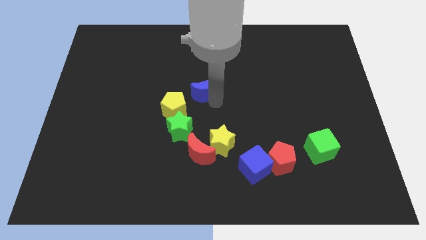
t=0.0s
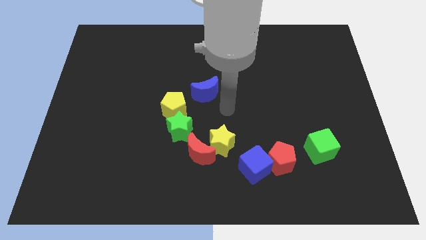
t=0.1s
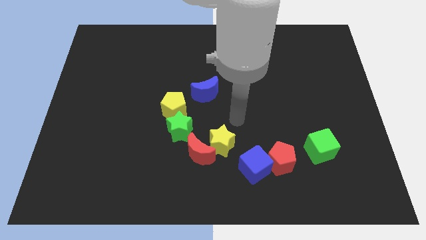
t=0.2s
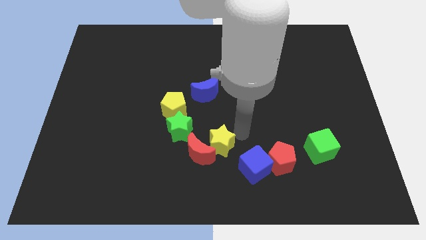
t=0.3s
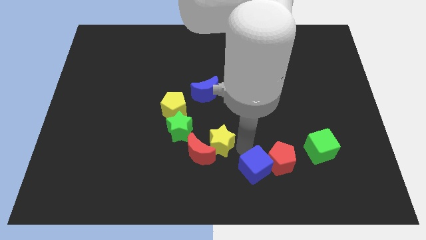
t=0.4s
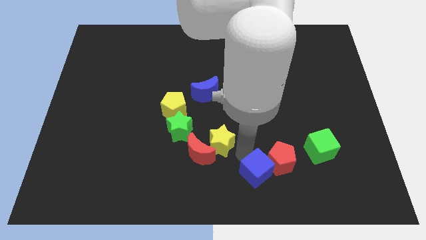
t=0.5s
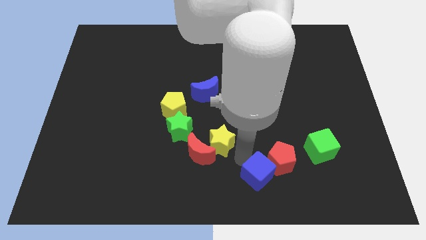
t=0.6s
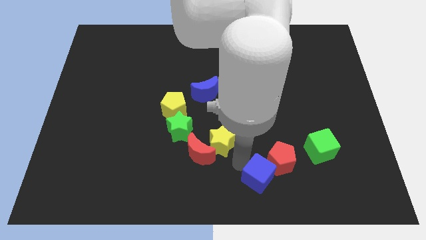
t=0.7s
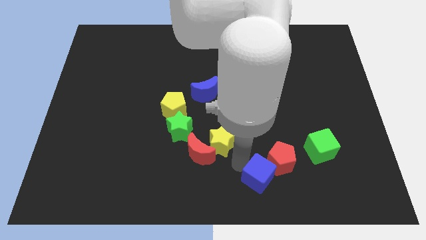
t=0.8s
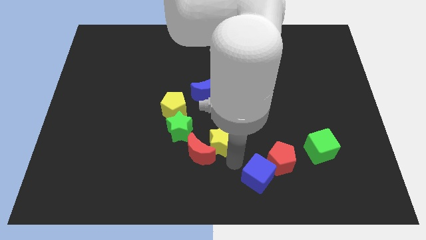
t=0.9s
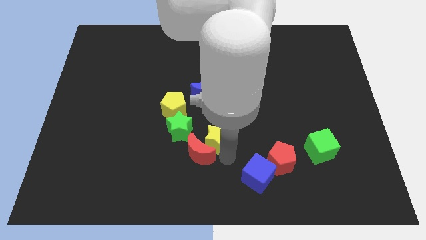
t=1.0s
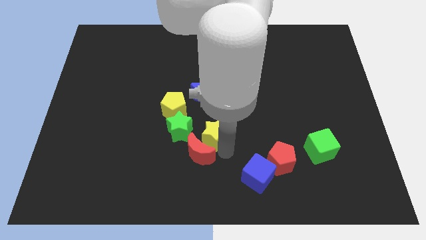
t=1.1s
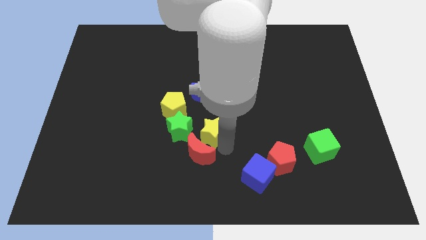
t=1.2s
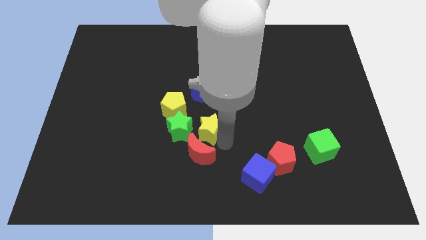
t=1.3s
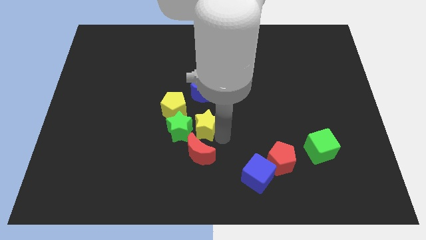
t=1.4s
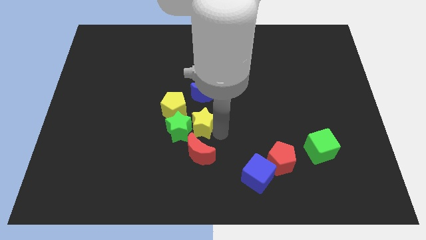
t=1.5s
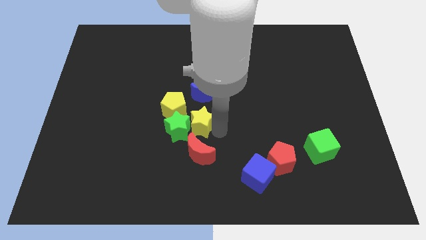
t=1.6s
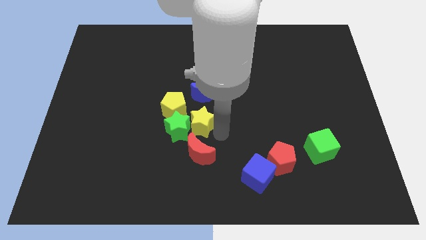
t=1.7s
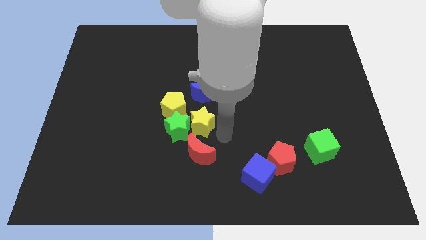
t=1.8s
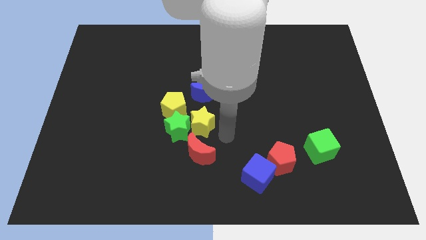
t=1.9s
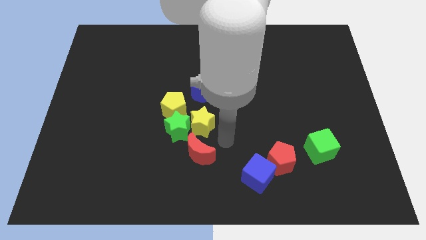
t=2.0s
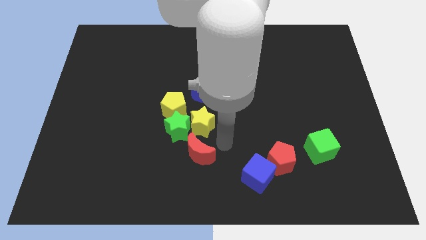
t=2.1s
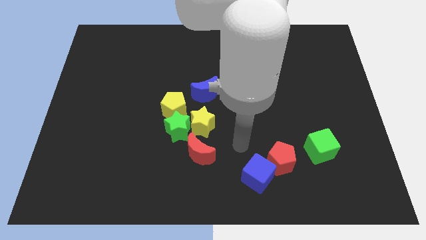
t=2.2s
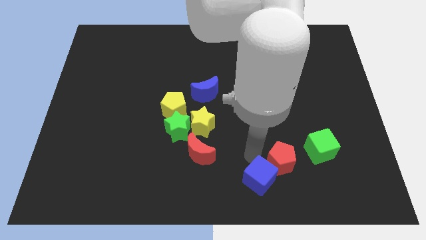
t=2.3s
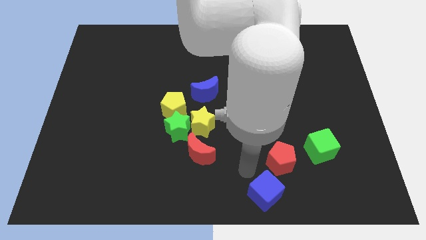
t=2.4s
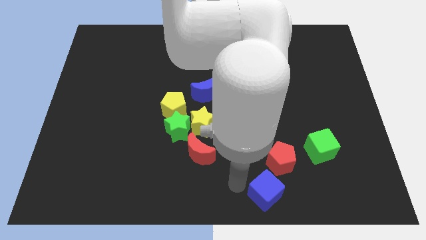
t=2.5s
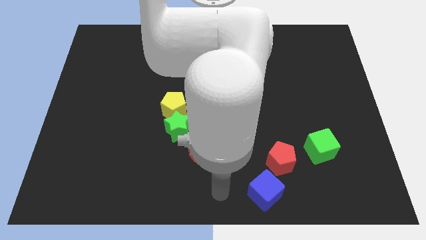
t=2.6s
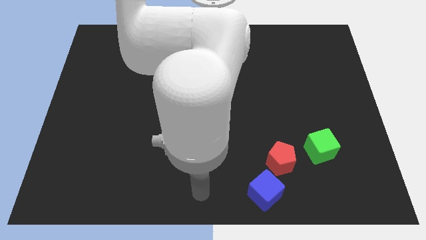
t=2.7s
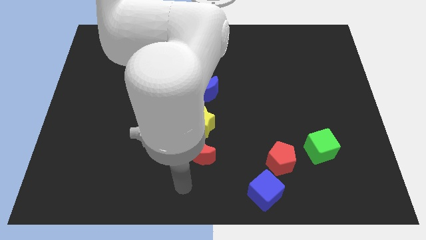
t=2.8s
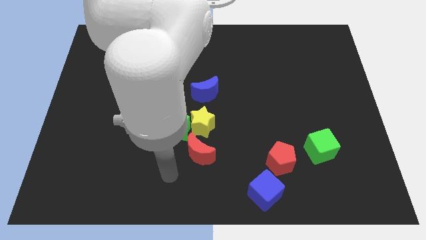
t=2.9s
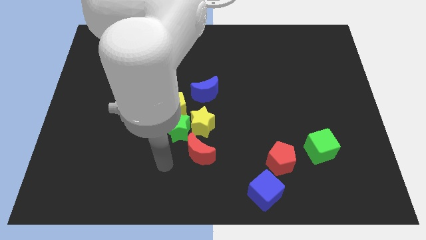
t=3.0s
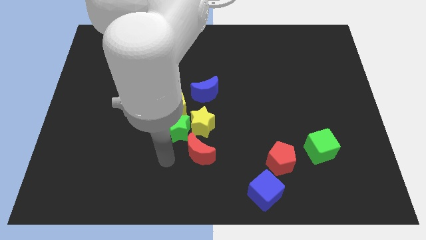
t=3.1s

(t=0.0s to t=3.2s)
slightly move the blue cube down

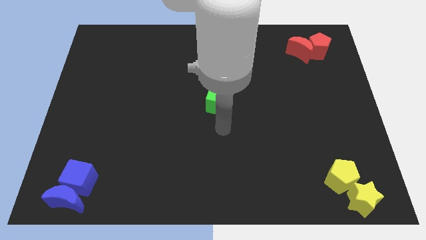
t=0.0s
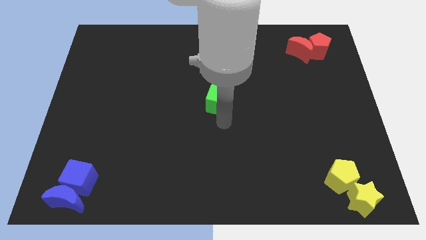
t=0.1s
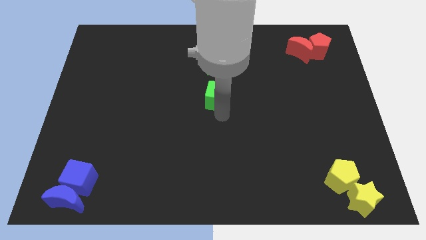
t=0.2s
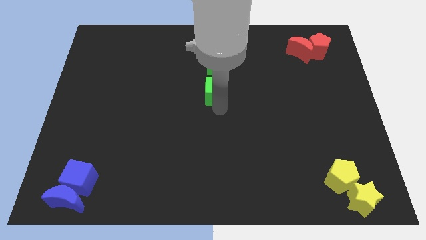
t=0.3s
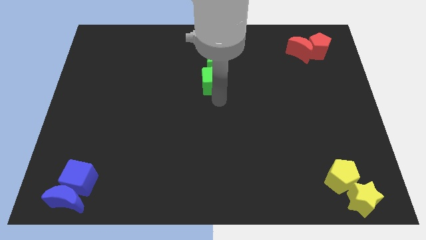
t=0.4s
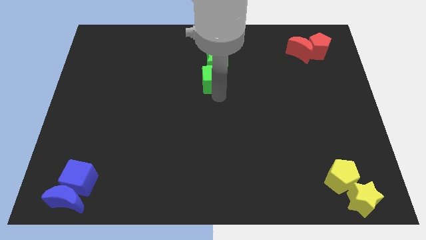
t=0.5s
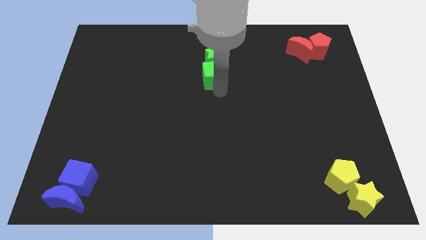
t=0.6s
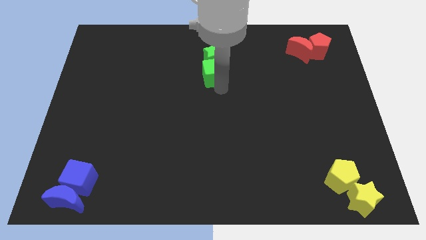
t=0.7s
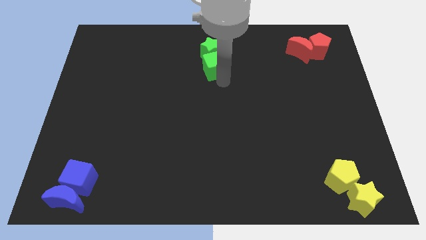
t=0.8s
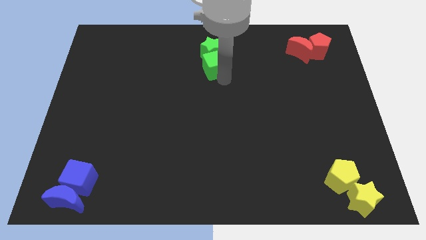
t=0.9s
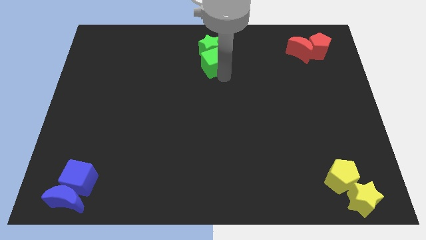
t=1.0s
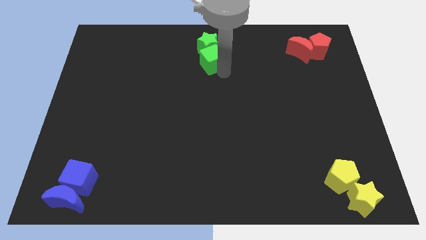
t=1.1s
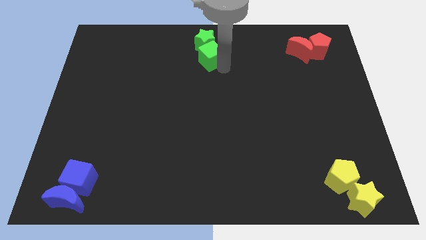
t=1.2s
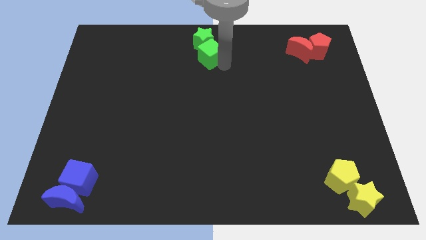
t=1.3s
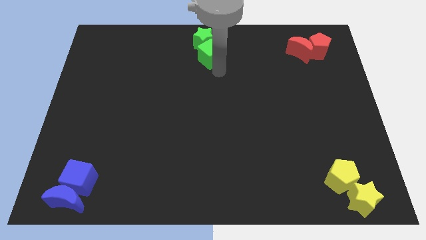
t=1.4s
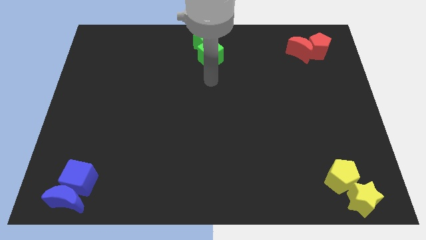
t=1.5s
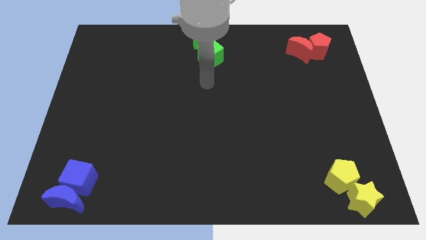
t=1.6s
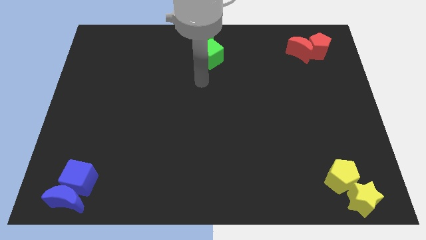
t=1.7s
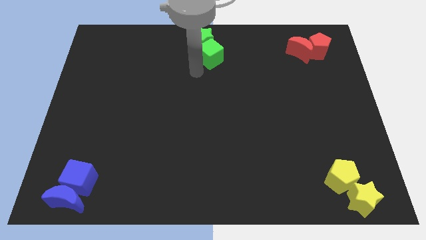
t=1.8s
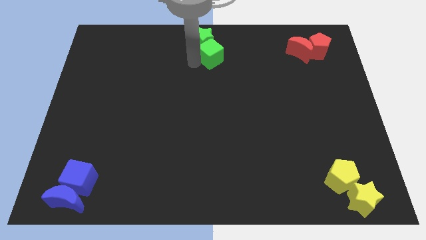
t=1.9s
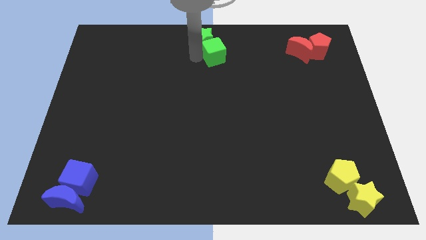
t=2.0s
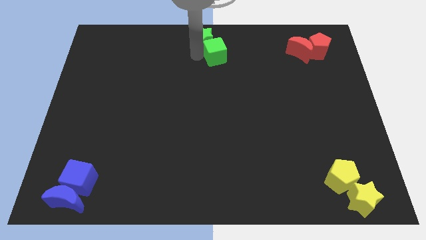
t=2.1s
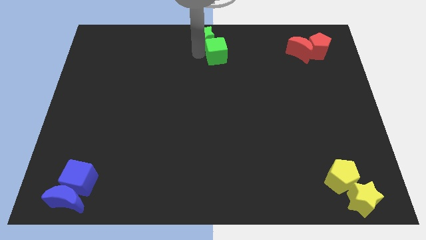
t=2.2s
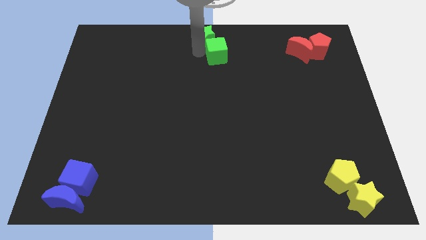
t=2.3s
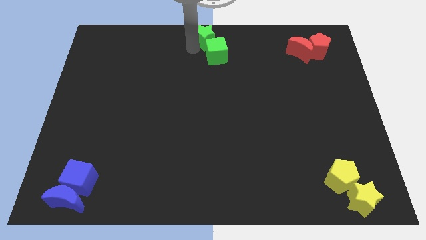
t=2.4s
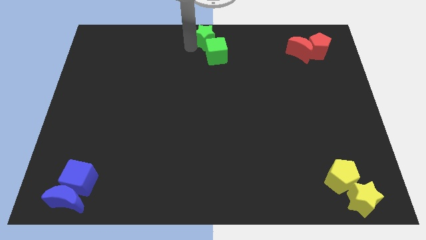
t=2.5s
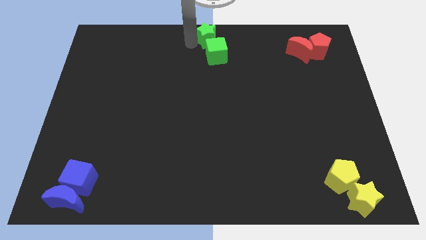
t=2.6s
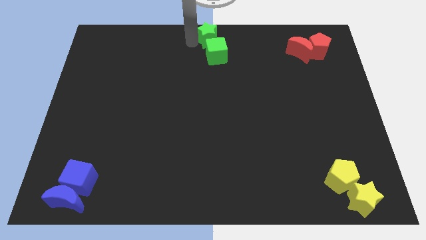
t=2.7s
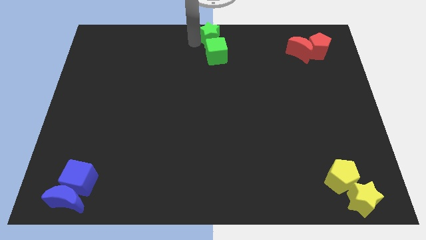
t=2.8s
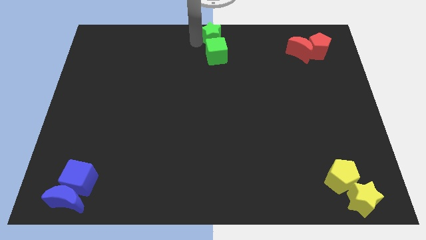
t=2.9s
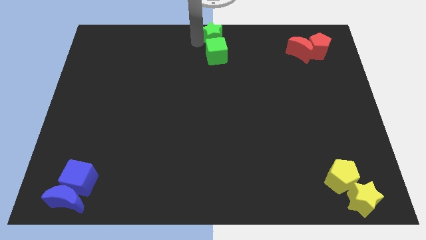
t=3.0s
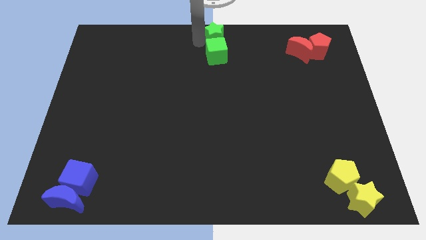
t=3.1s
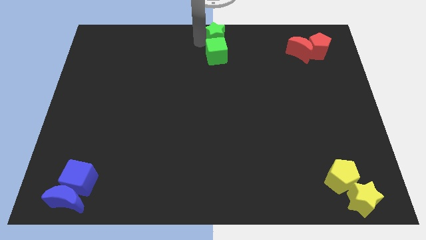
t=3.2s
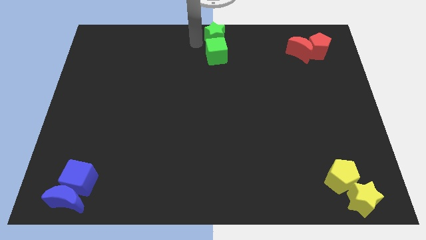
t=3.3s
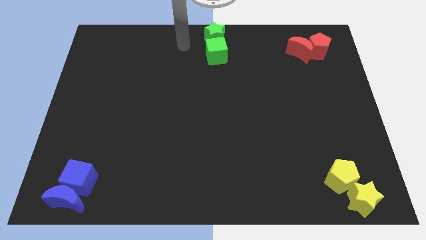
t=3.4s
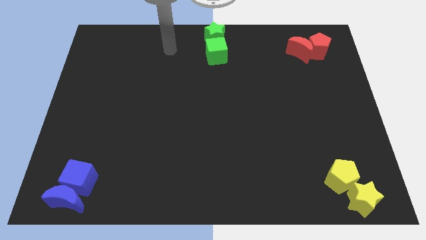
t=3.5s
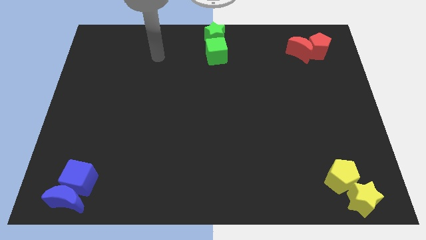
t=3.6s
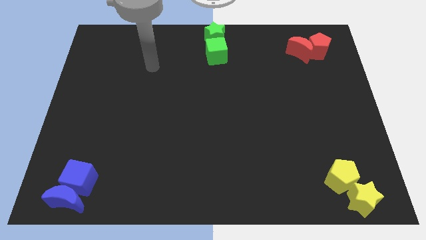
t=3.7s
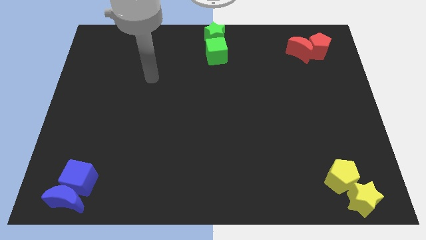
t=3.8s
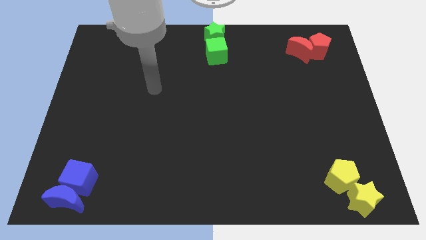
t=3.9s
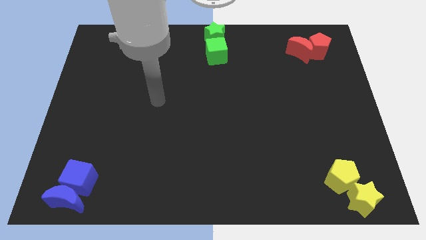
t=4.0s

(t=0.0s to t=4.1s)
push the green star in to green cube

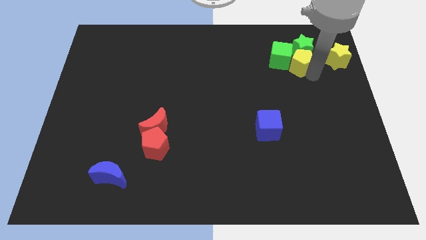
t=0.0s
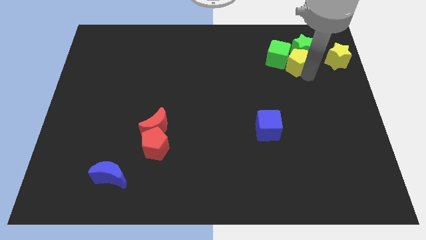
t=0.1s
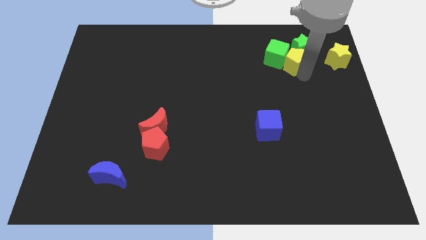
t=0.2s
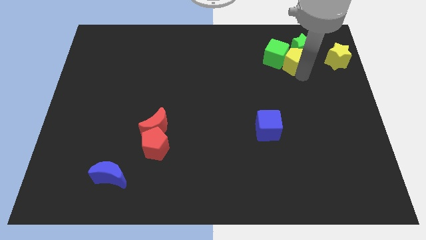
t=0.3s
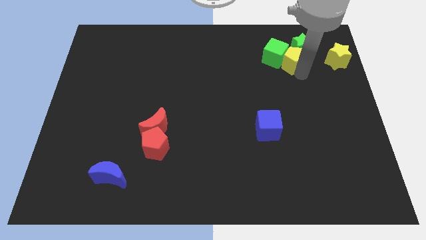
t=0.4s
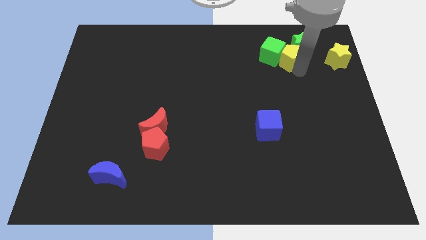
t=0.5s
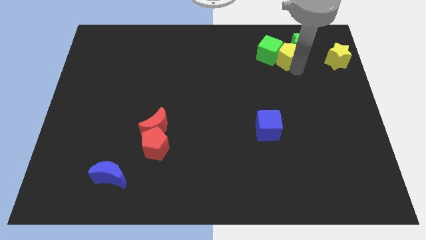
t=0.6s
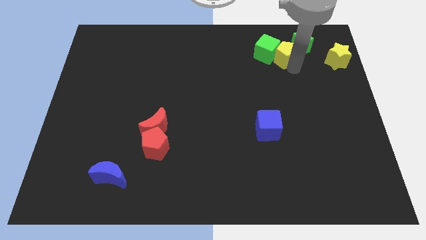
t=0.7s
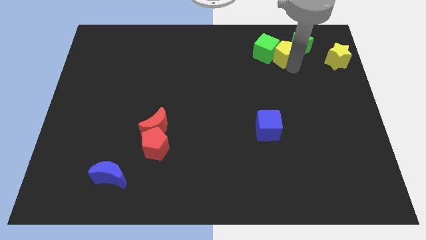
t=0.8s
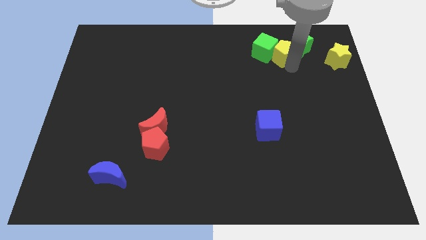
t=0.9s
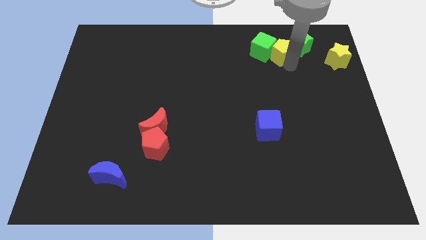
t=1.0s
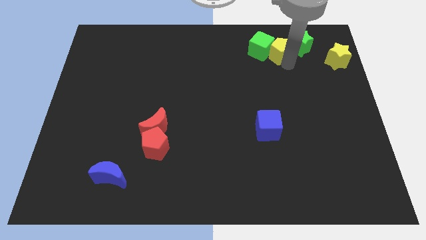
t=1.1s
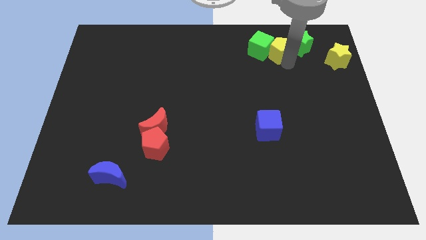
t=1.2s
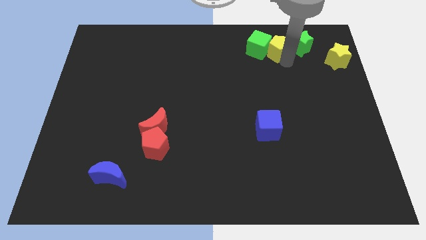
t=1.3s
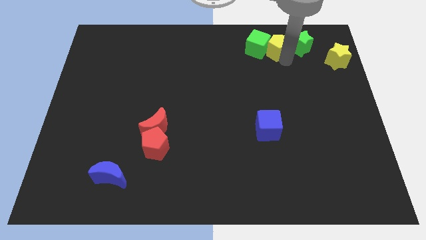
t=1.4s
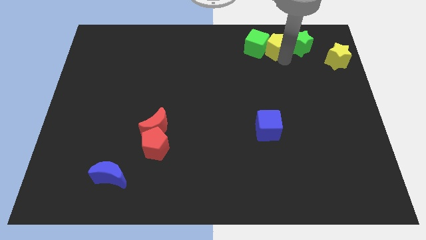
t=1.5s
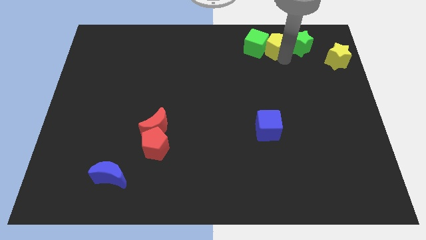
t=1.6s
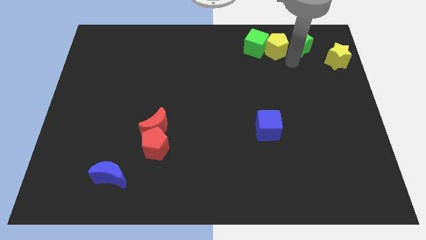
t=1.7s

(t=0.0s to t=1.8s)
place yellow pentagon to the left of green star
